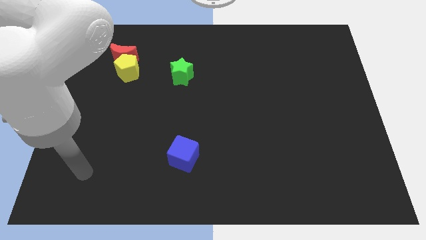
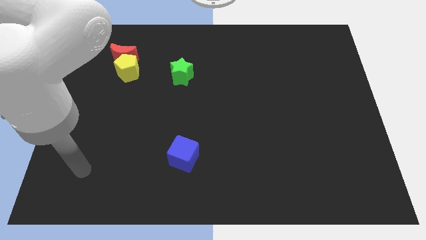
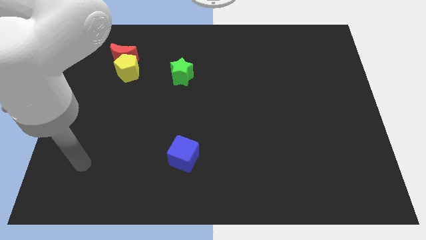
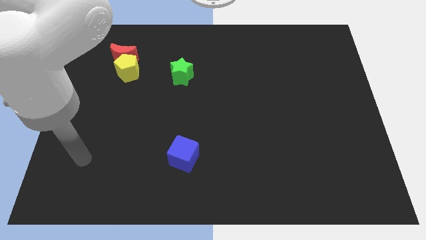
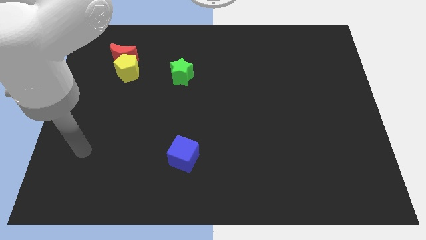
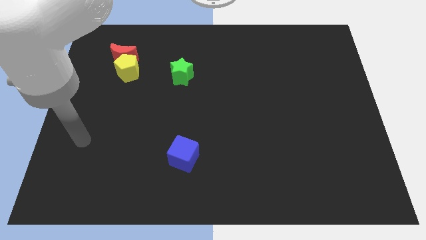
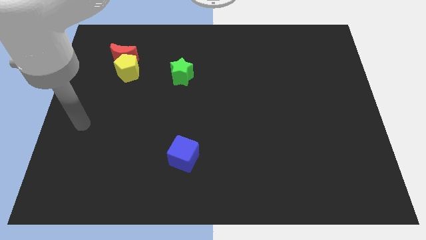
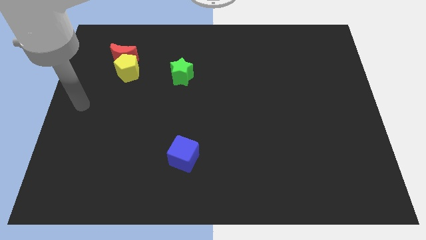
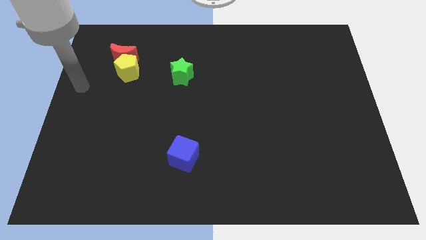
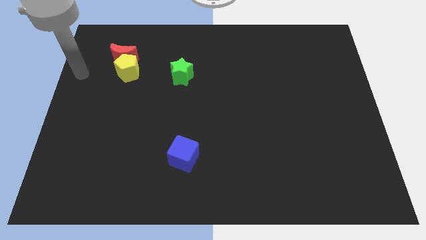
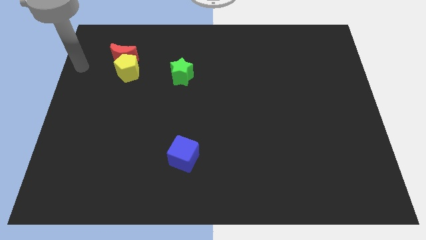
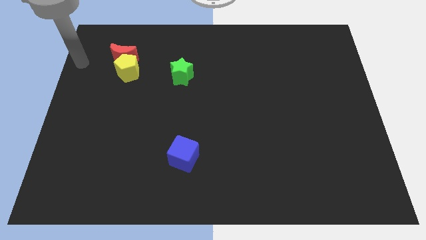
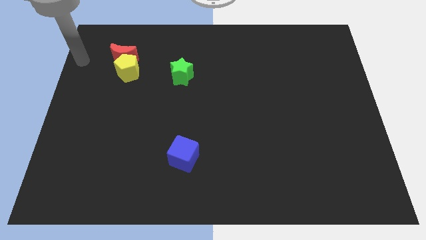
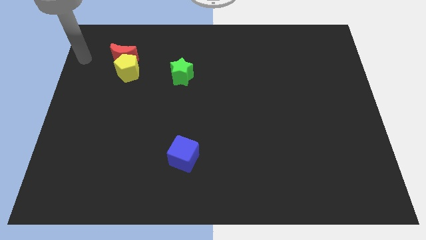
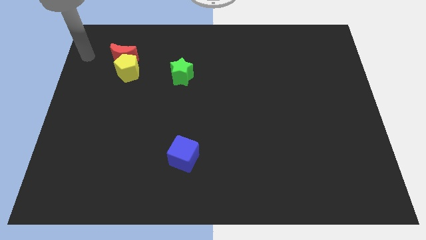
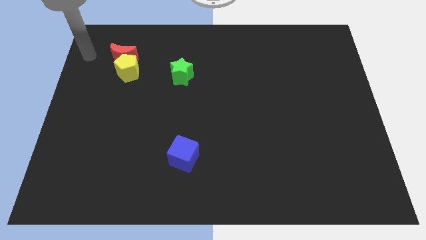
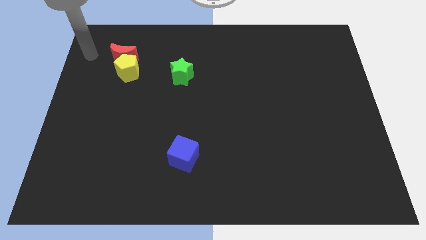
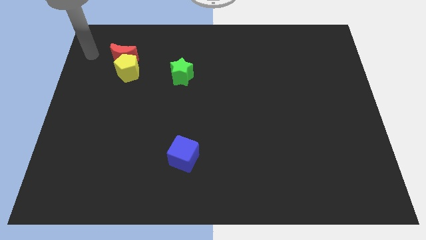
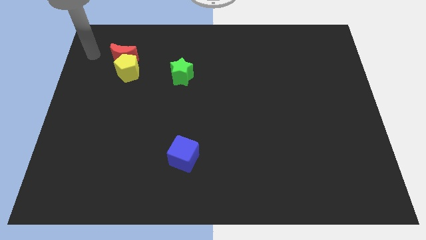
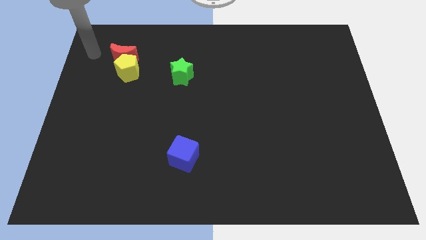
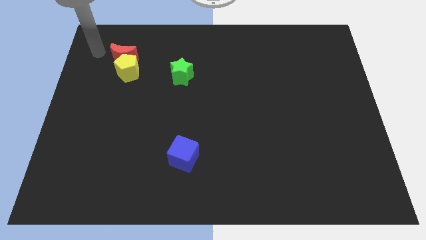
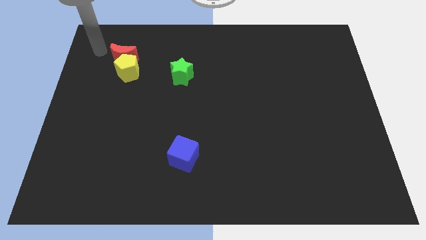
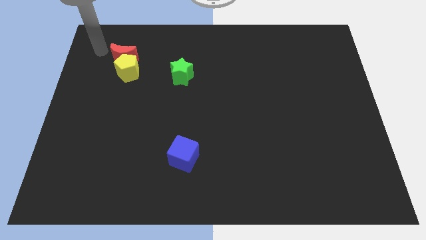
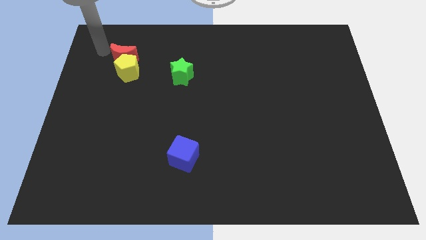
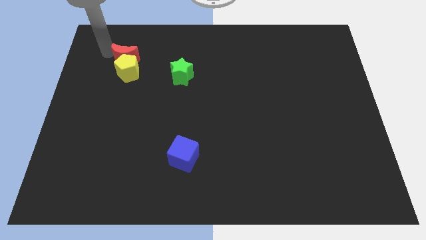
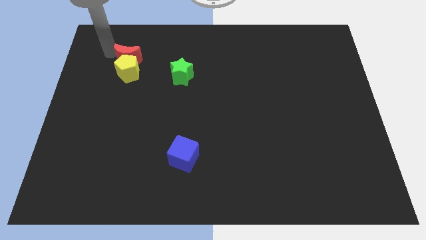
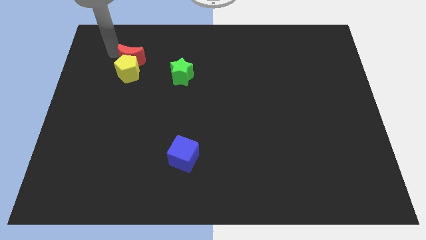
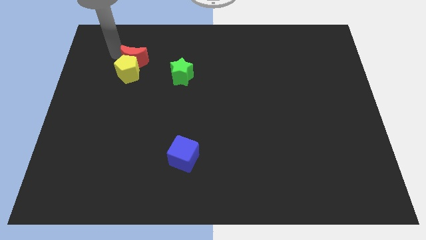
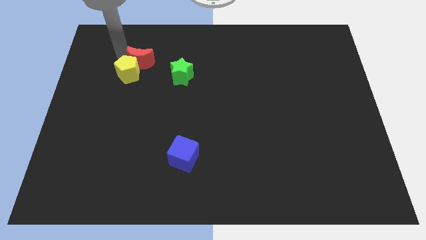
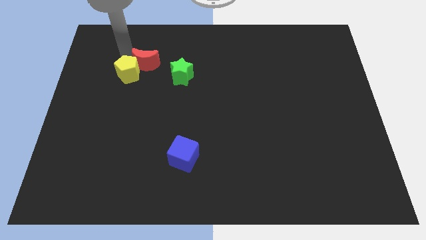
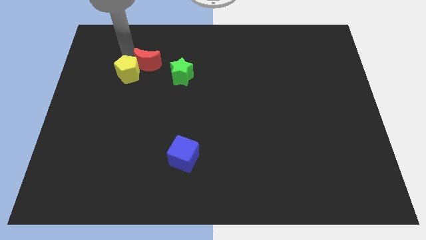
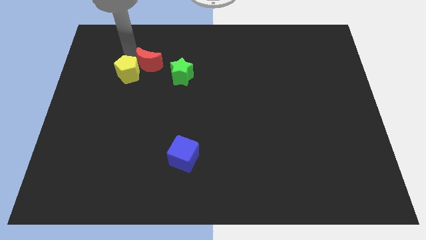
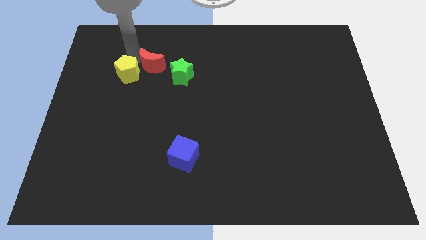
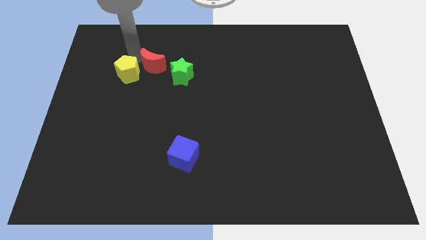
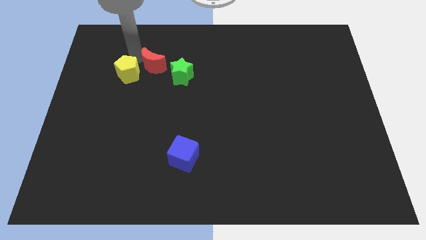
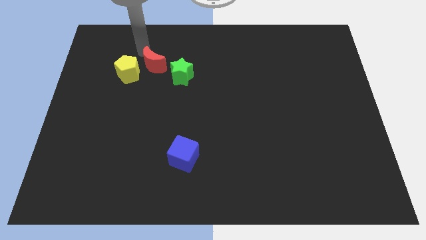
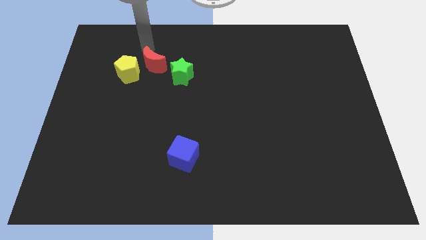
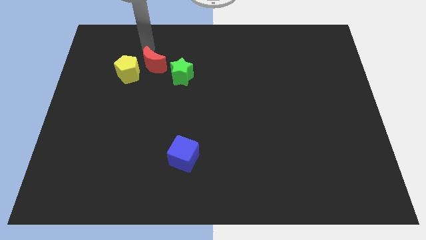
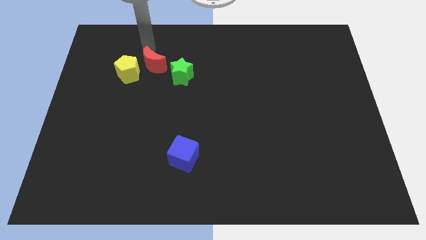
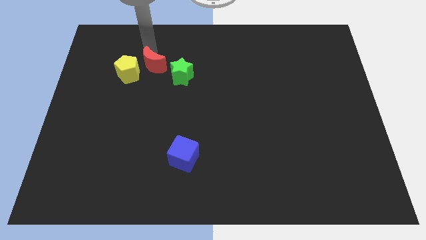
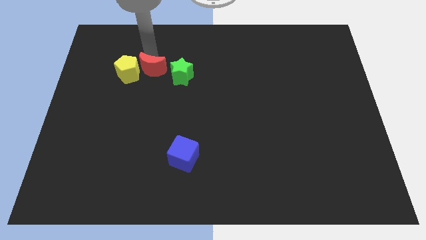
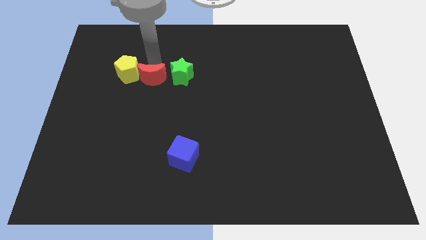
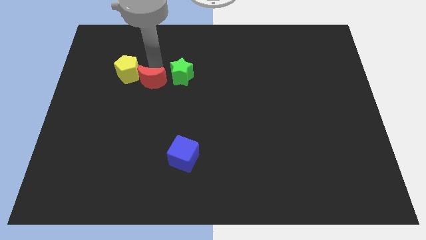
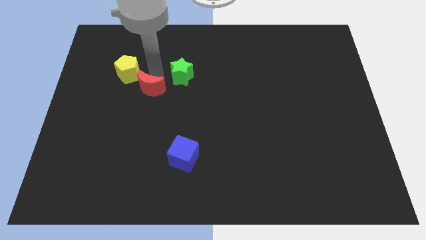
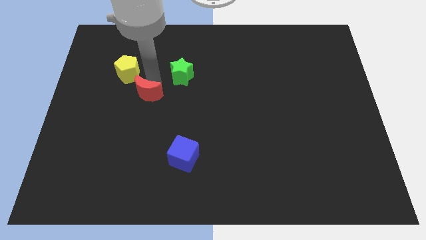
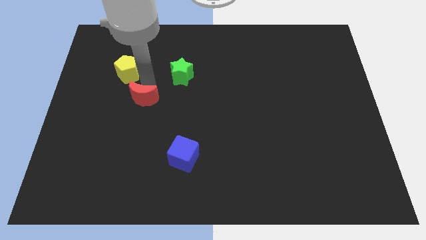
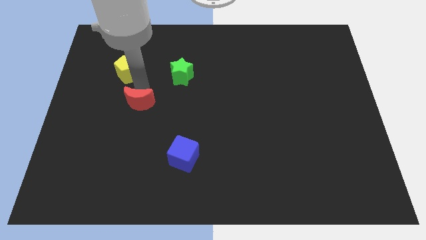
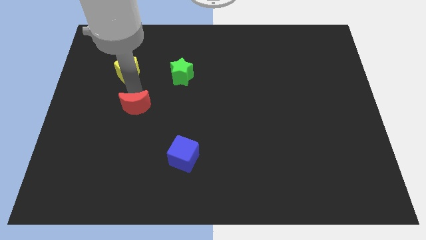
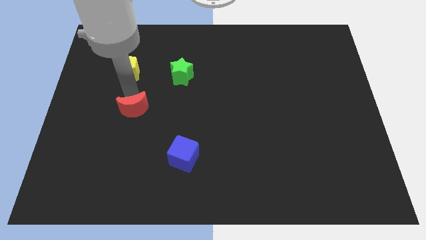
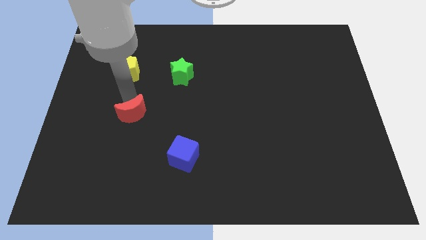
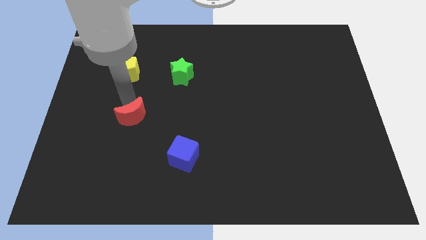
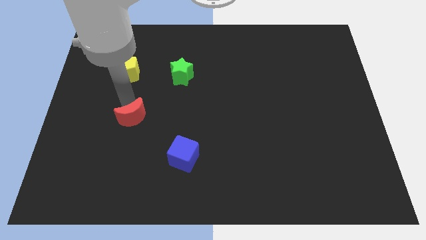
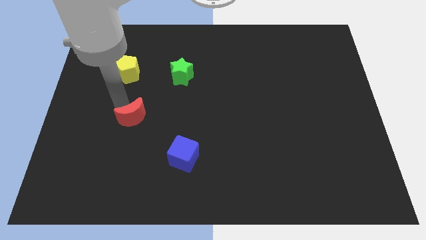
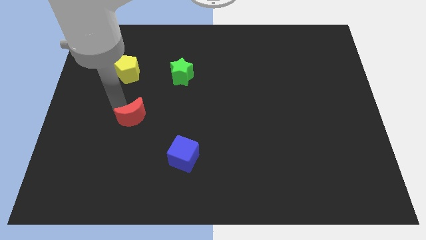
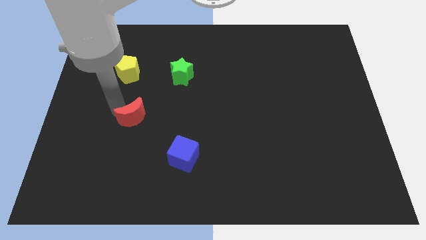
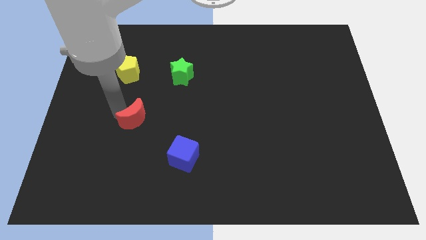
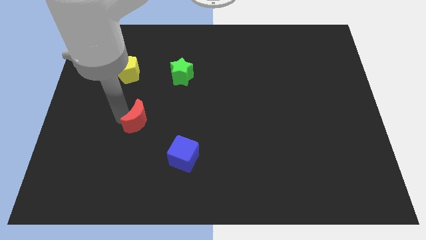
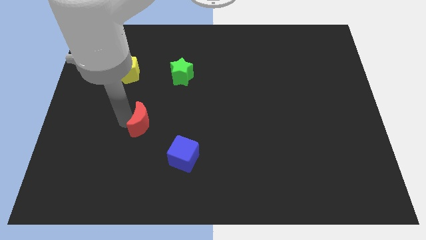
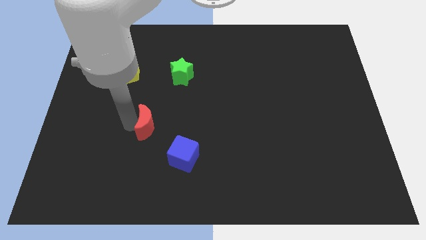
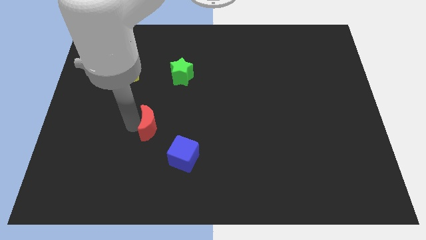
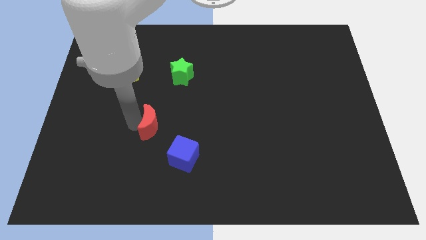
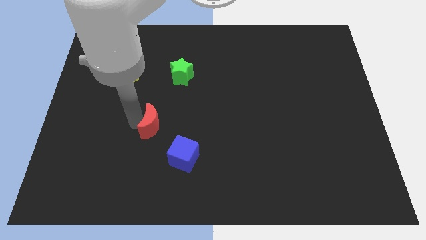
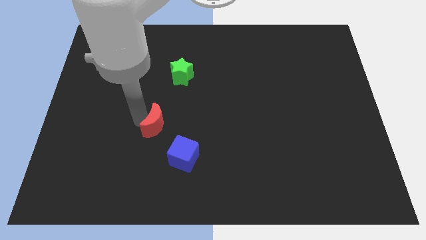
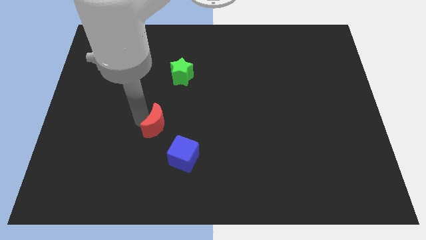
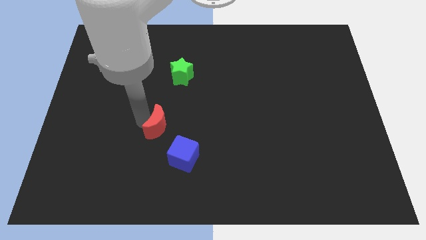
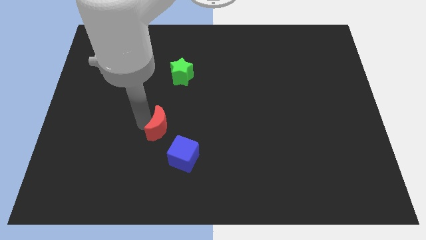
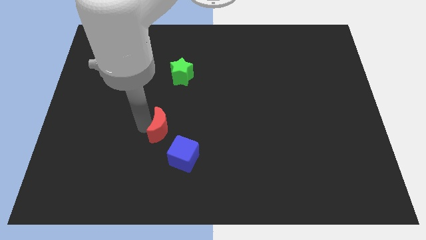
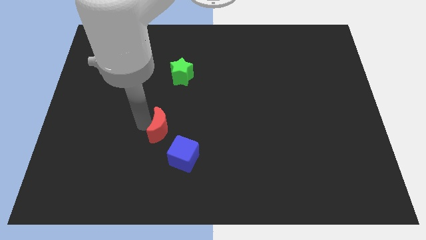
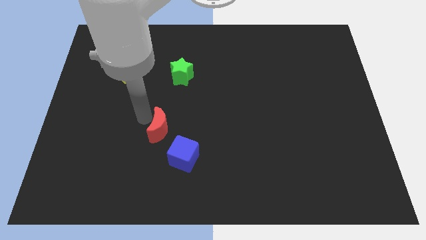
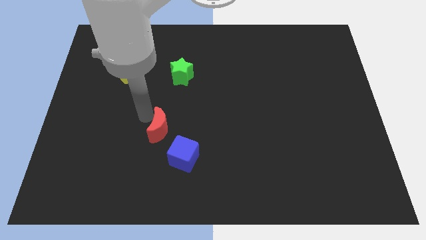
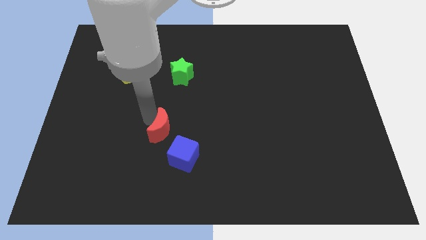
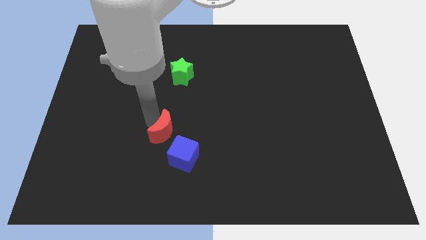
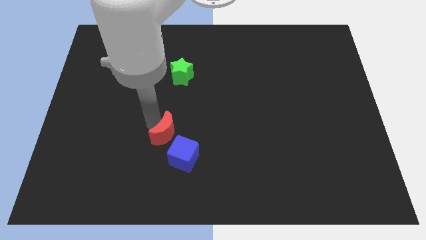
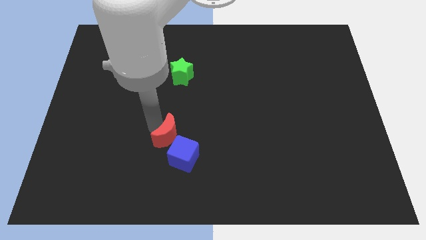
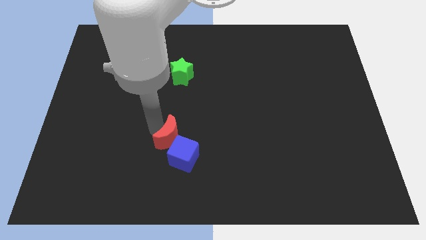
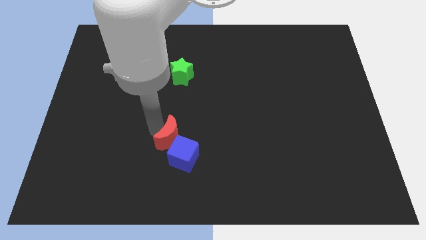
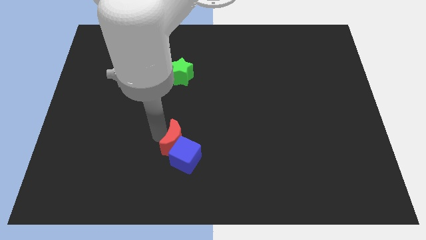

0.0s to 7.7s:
put the red block towards the blue cube

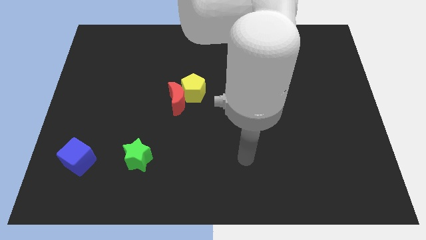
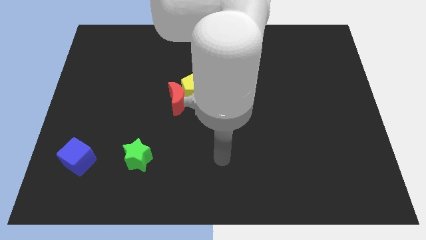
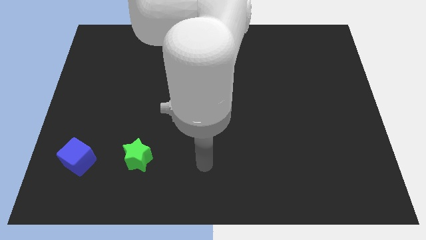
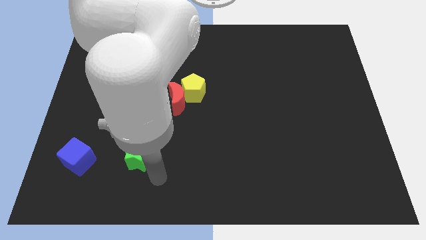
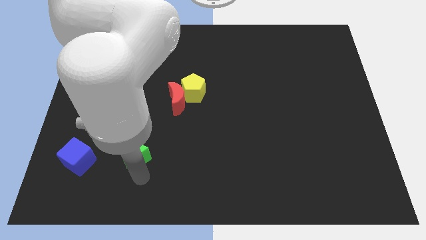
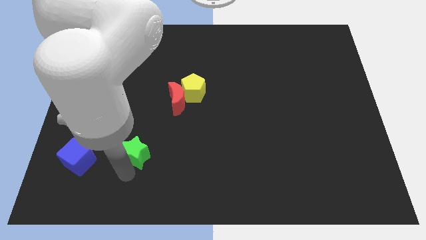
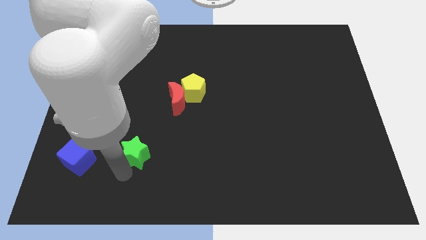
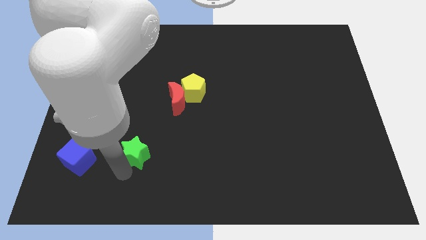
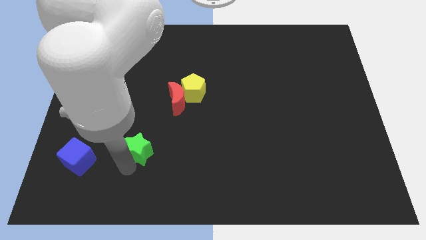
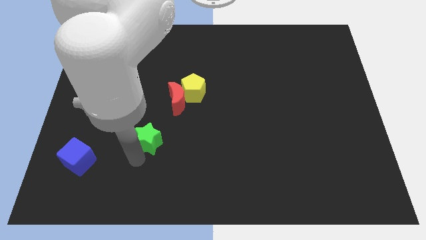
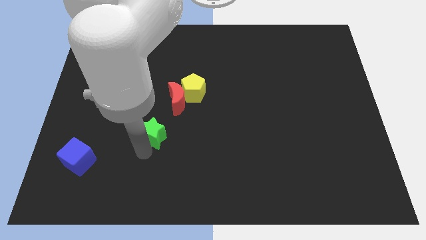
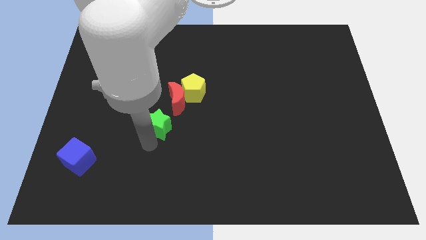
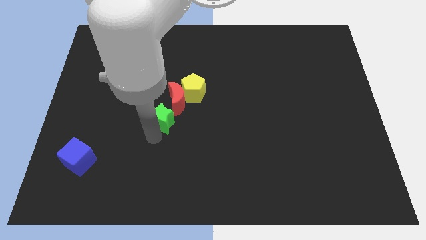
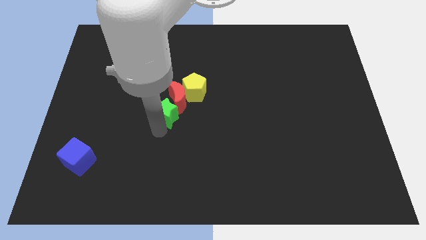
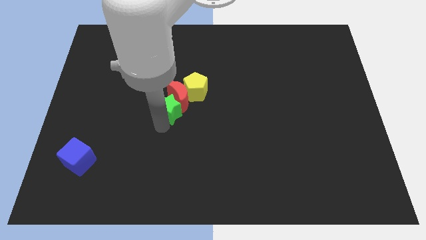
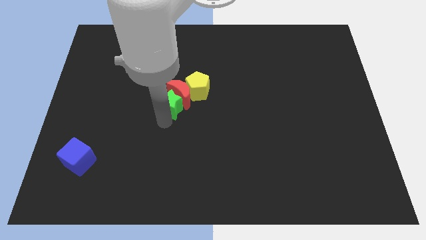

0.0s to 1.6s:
move the green star next to the moon
